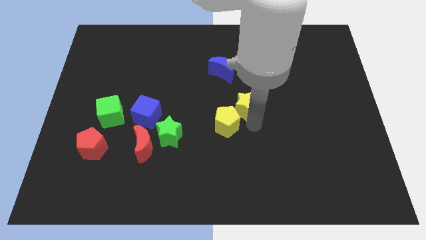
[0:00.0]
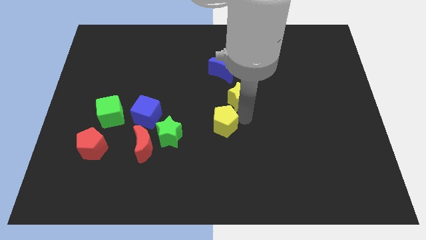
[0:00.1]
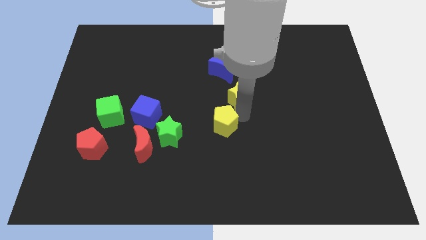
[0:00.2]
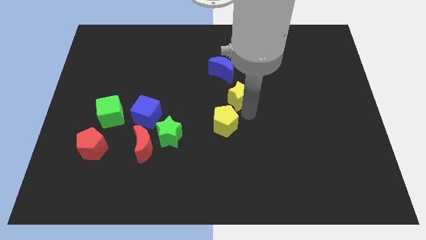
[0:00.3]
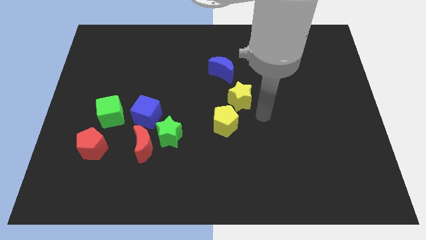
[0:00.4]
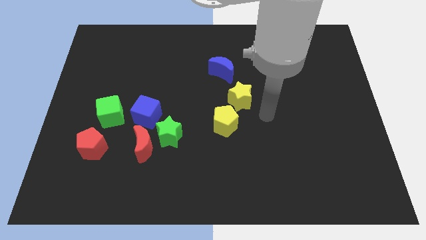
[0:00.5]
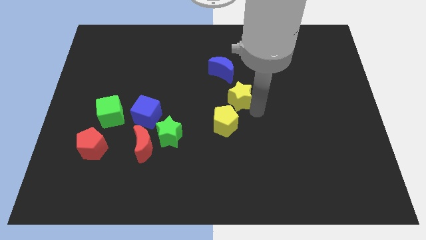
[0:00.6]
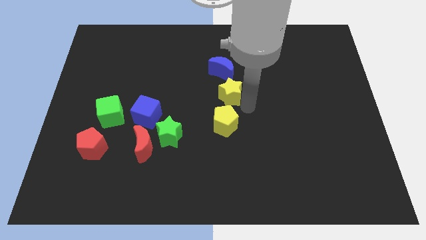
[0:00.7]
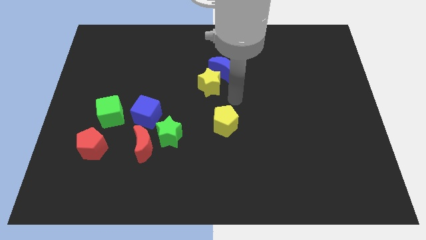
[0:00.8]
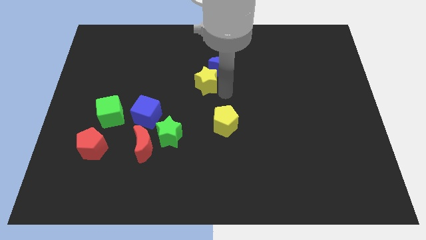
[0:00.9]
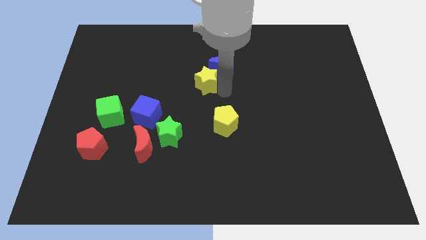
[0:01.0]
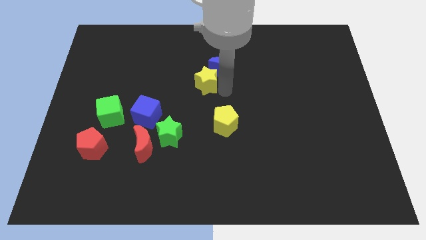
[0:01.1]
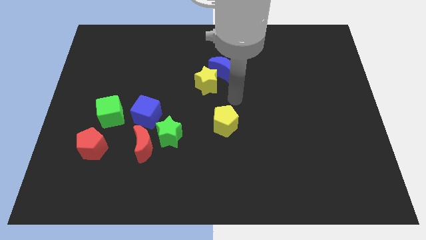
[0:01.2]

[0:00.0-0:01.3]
move the yellow star to the bottom side of the blue moon

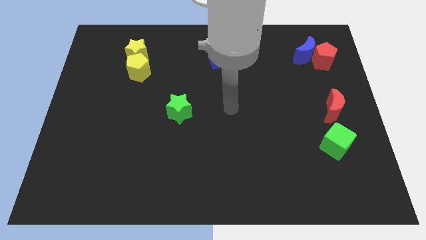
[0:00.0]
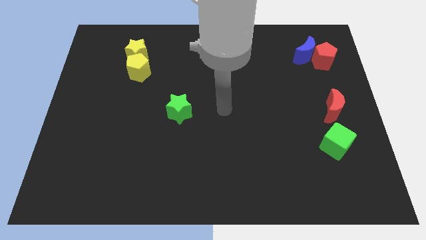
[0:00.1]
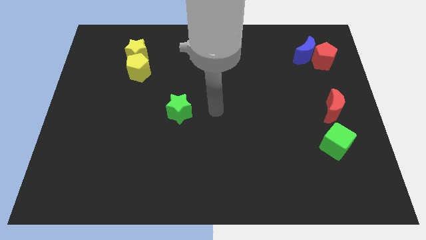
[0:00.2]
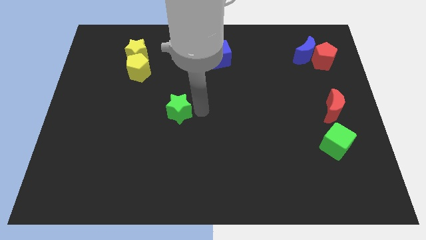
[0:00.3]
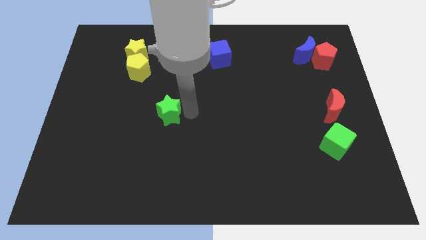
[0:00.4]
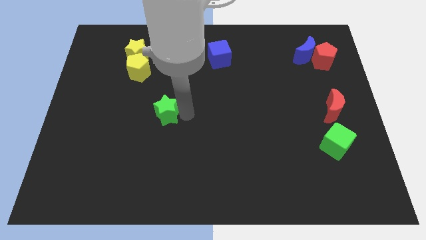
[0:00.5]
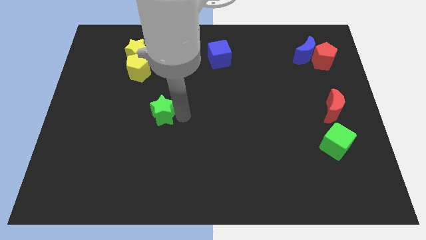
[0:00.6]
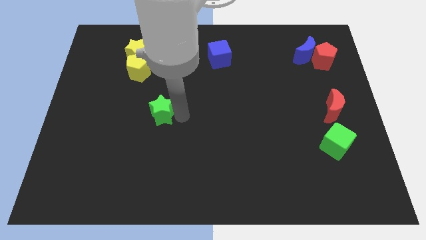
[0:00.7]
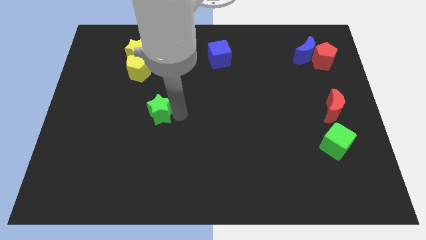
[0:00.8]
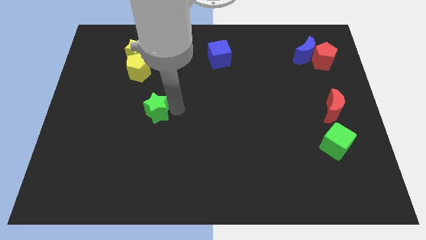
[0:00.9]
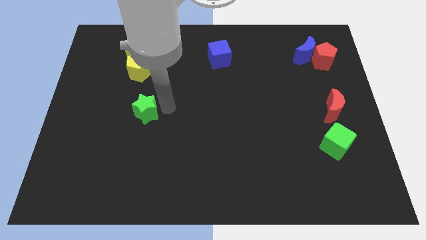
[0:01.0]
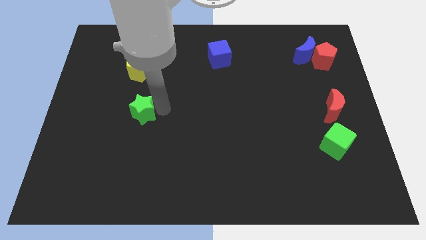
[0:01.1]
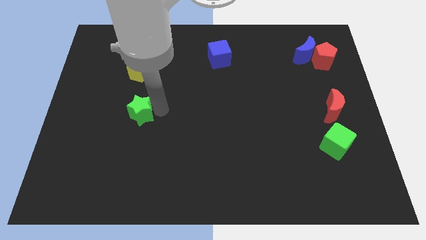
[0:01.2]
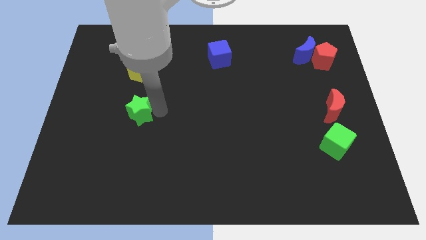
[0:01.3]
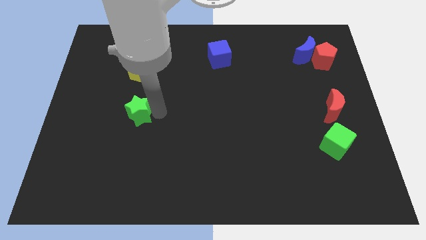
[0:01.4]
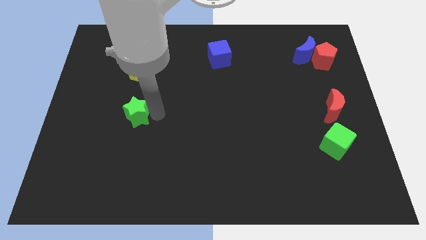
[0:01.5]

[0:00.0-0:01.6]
place the green star under the yellow pentagon

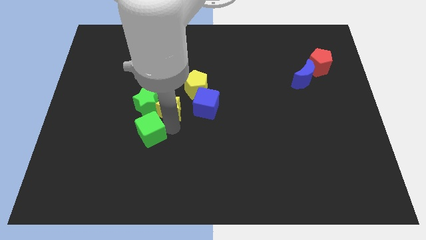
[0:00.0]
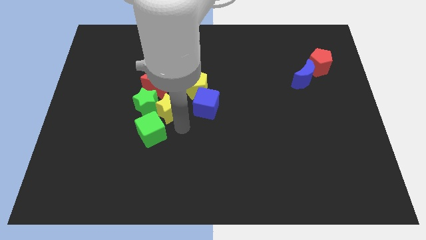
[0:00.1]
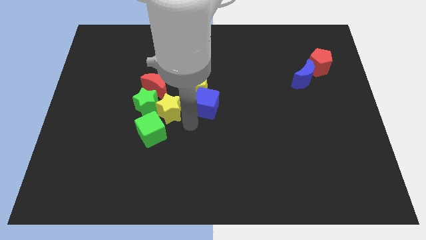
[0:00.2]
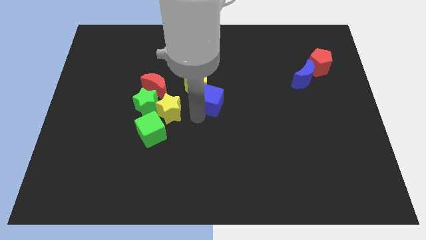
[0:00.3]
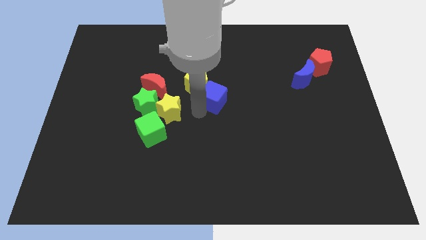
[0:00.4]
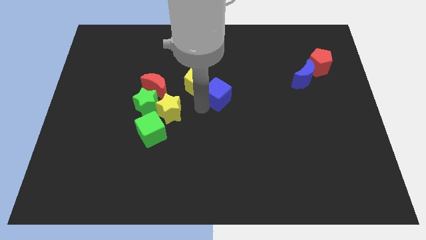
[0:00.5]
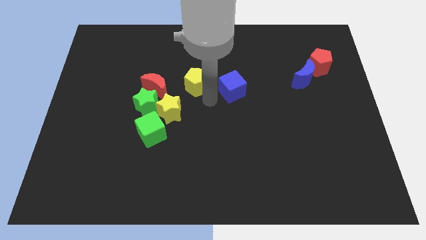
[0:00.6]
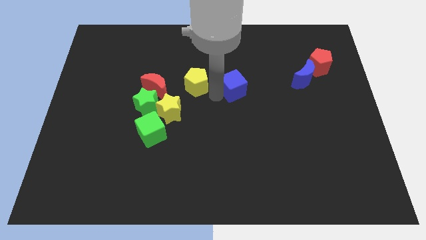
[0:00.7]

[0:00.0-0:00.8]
push the blue cube to the right side of the yellow pentagon

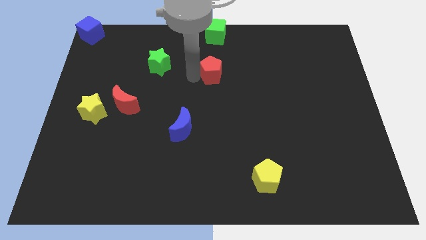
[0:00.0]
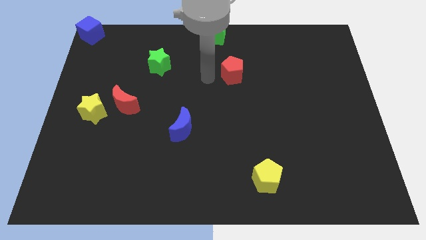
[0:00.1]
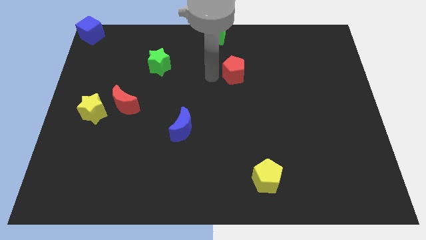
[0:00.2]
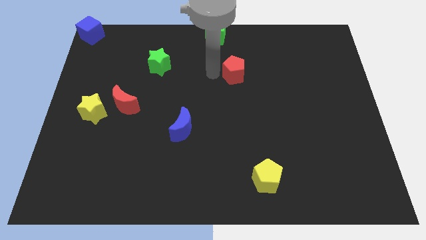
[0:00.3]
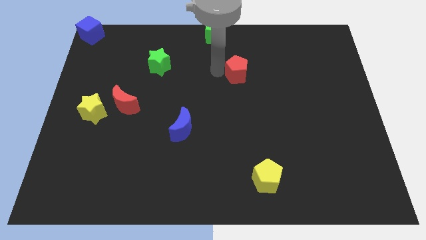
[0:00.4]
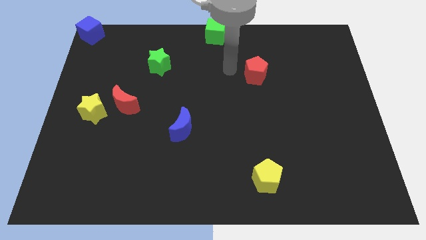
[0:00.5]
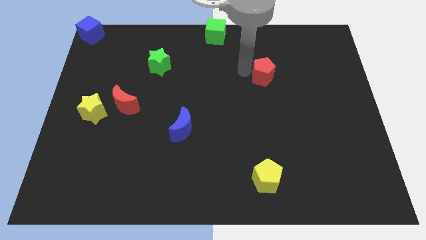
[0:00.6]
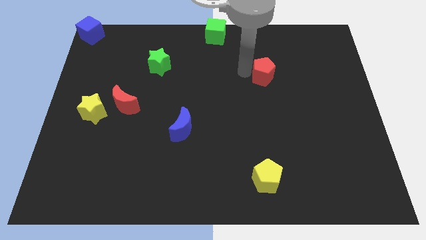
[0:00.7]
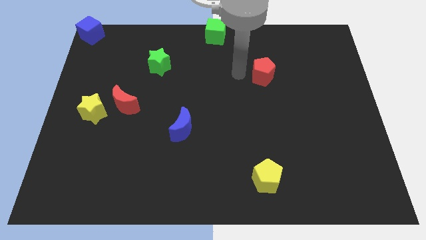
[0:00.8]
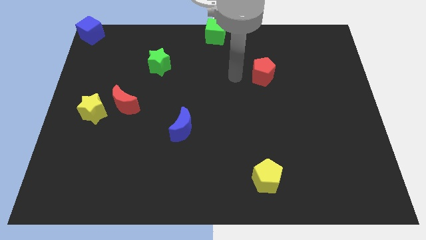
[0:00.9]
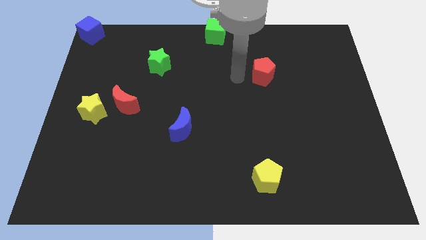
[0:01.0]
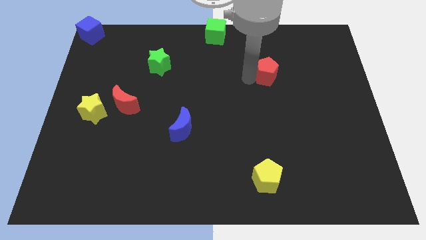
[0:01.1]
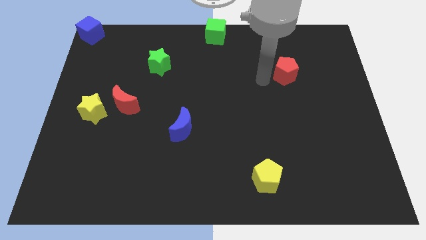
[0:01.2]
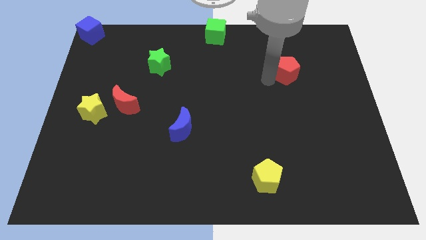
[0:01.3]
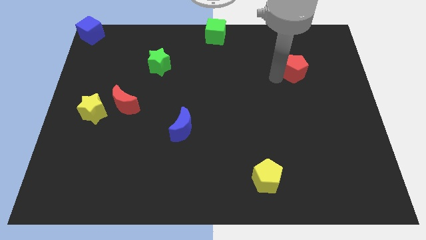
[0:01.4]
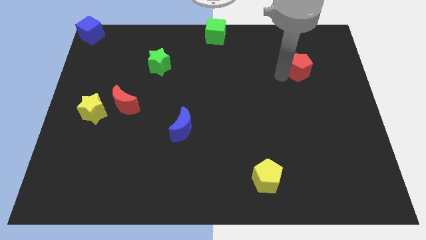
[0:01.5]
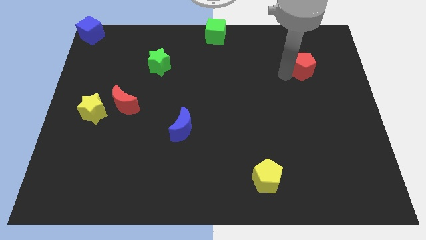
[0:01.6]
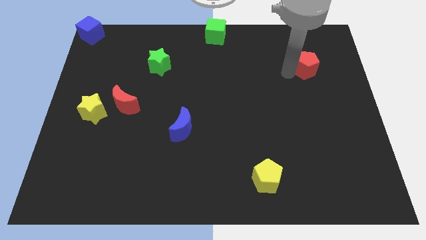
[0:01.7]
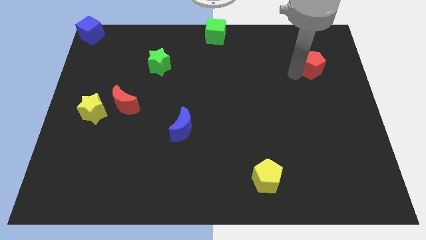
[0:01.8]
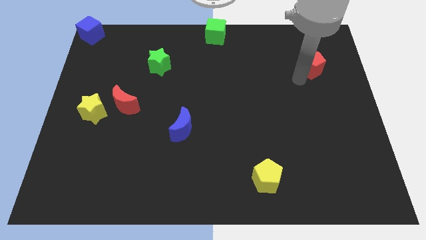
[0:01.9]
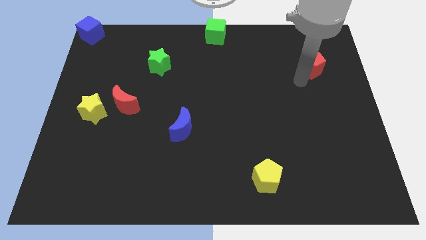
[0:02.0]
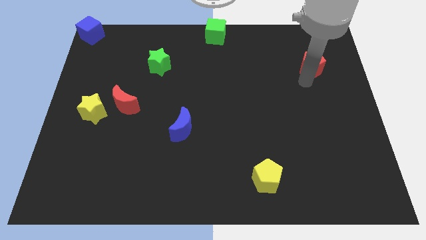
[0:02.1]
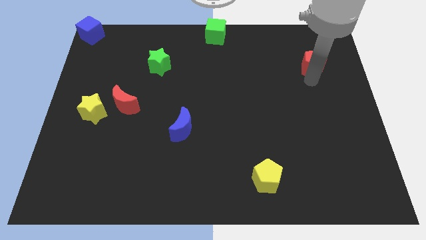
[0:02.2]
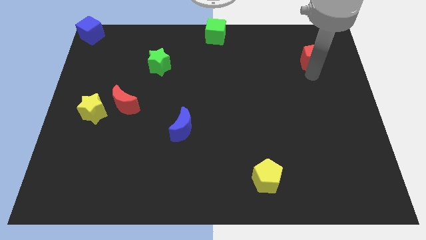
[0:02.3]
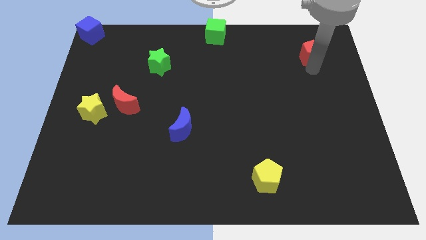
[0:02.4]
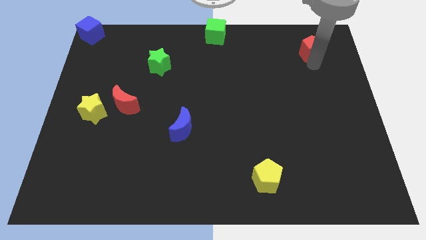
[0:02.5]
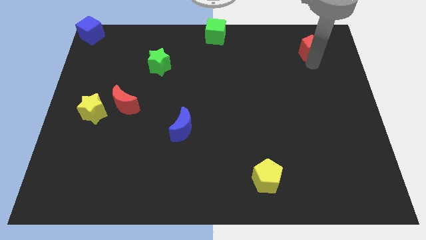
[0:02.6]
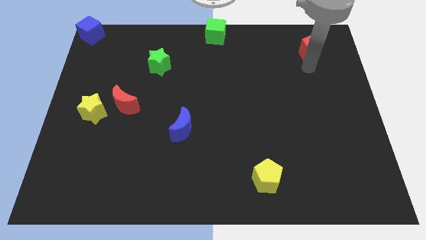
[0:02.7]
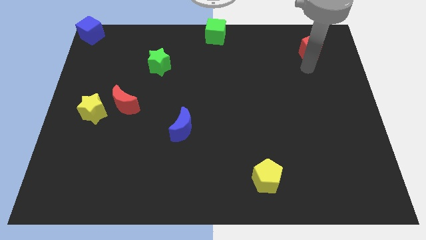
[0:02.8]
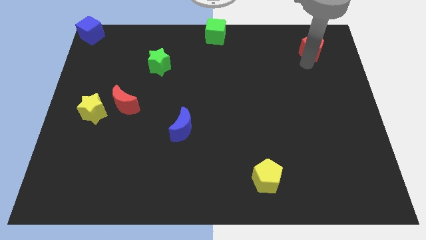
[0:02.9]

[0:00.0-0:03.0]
move the red pentagon to the top right

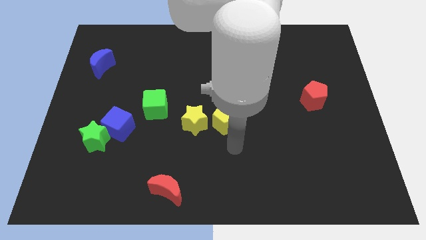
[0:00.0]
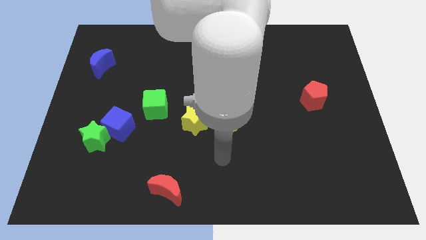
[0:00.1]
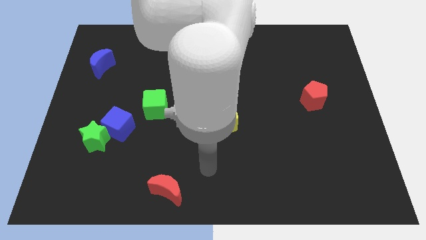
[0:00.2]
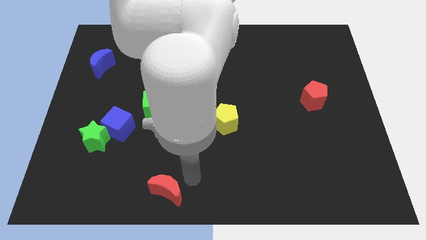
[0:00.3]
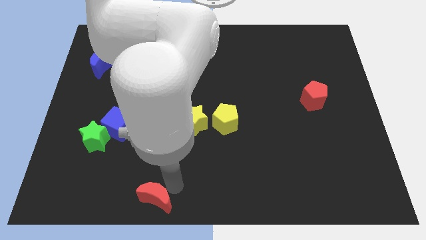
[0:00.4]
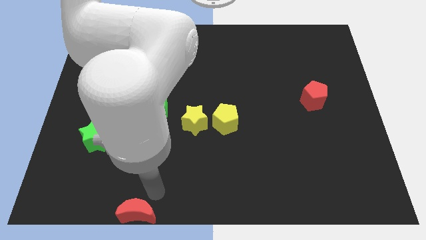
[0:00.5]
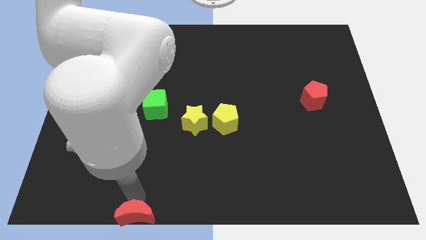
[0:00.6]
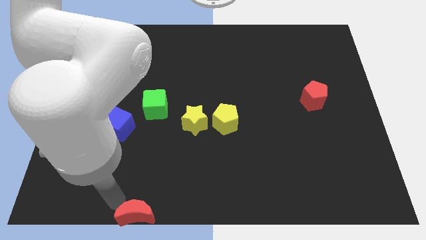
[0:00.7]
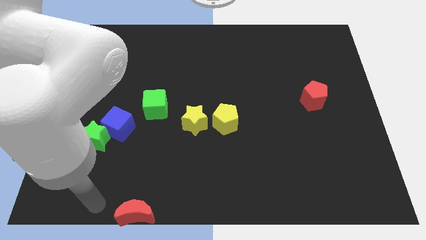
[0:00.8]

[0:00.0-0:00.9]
push red crescent towards bottom

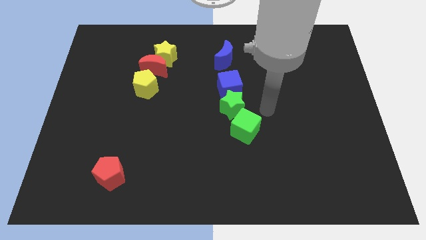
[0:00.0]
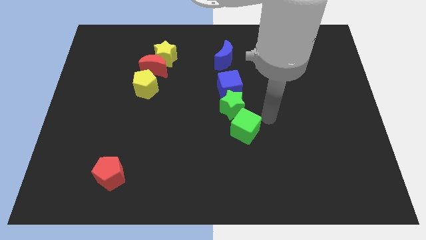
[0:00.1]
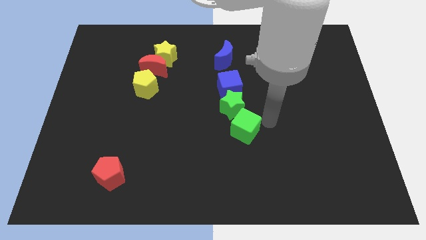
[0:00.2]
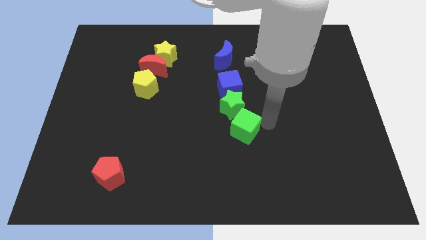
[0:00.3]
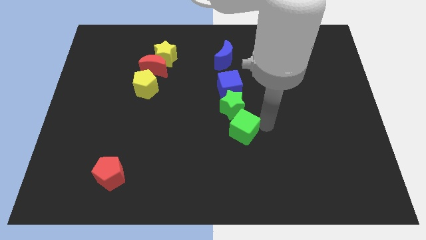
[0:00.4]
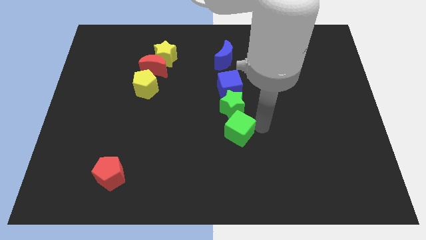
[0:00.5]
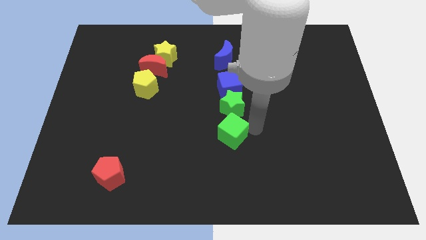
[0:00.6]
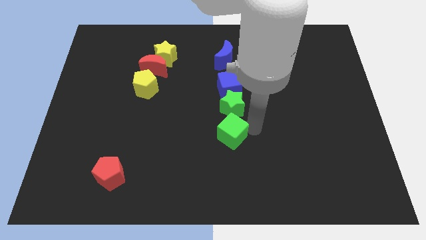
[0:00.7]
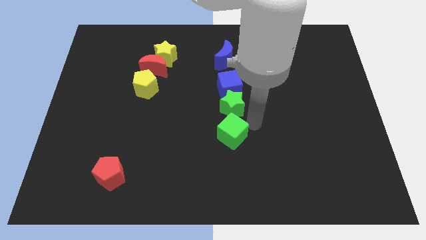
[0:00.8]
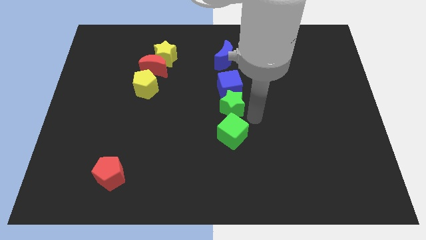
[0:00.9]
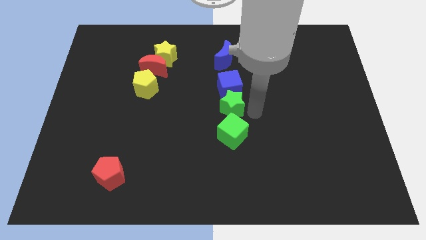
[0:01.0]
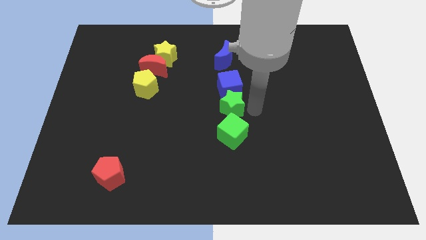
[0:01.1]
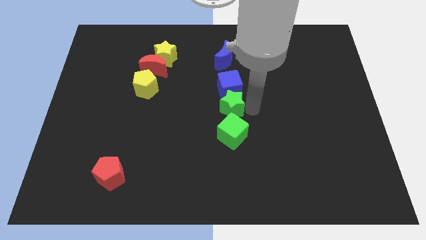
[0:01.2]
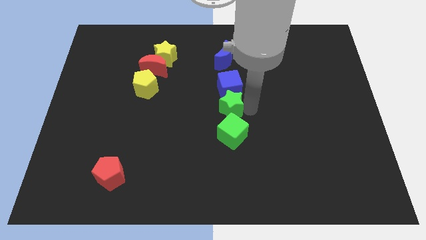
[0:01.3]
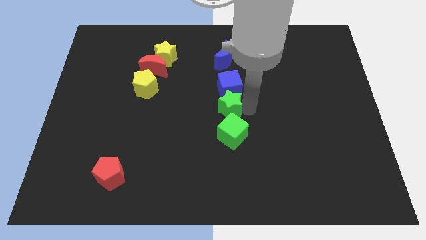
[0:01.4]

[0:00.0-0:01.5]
push both the green blocks to the bottom right side of the blue cube
